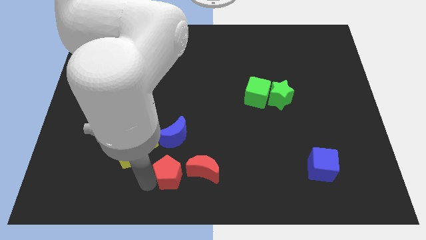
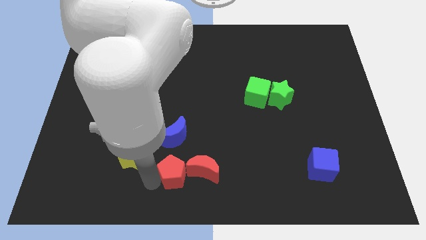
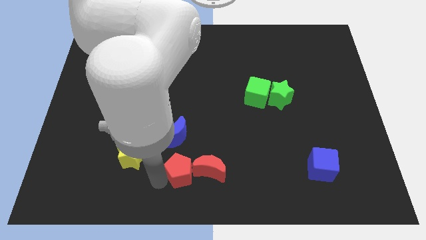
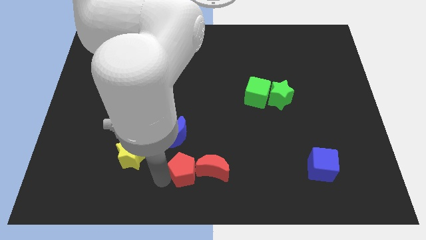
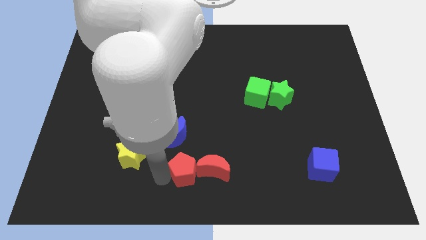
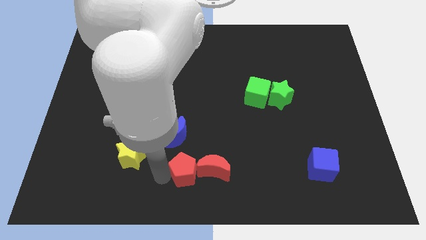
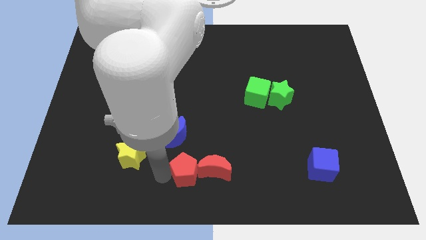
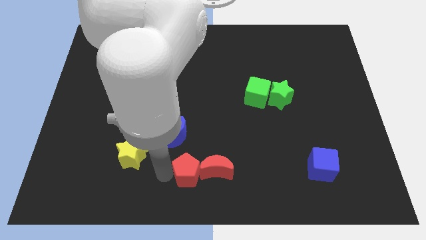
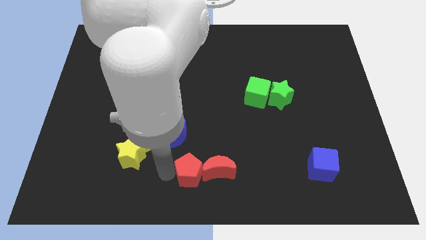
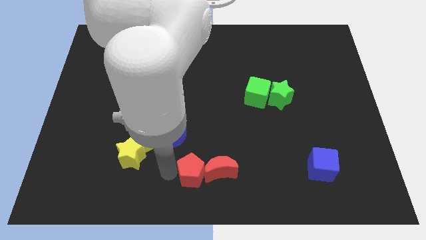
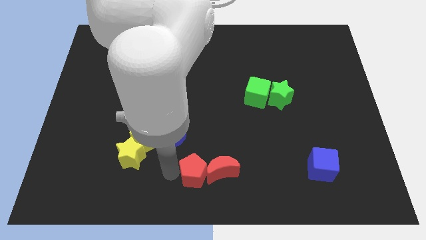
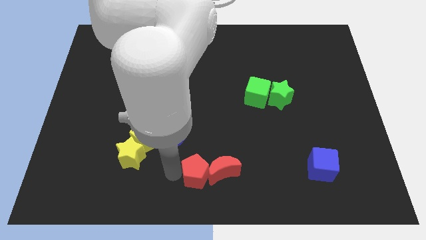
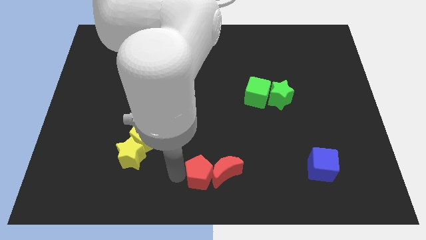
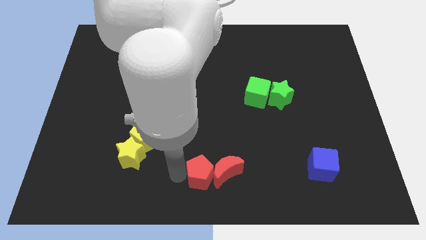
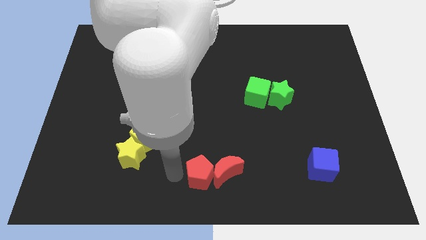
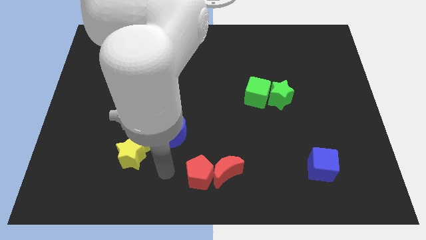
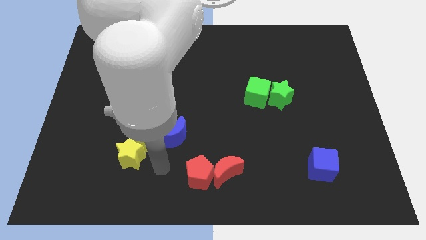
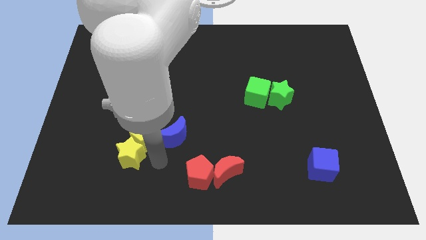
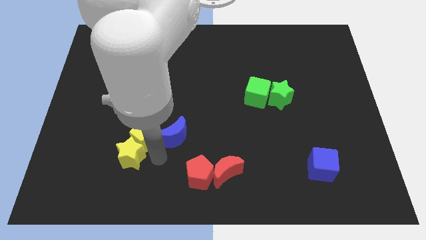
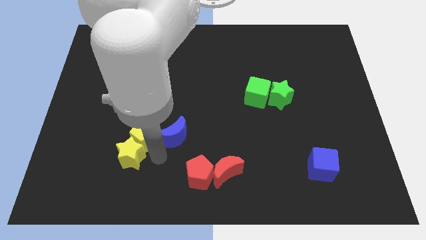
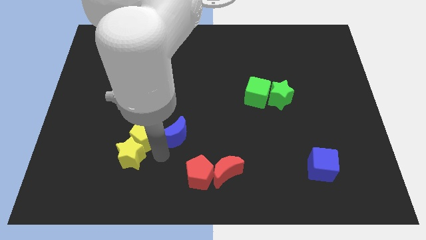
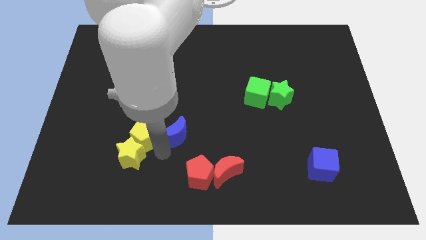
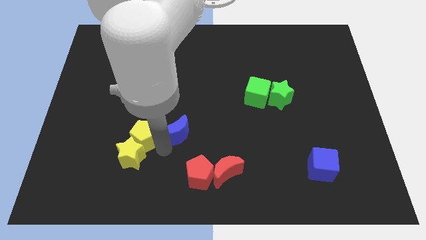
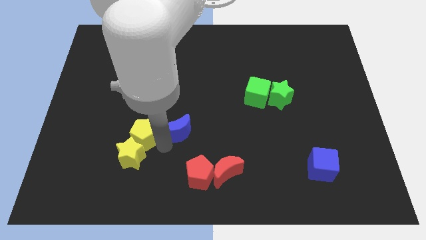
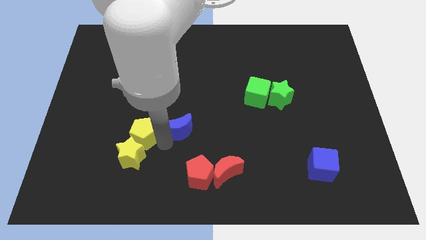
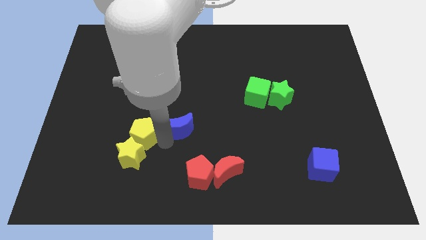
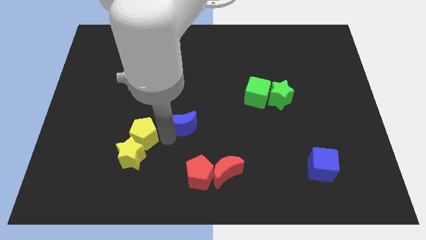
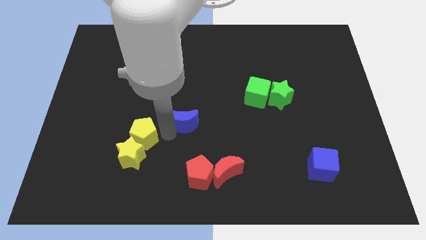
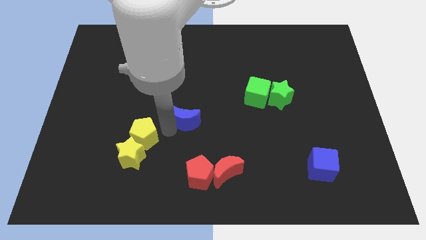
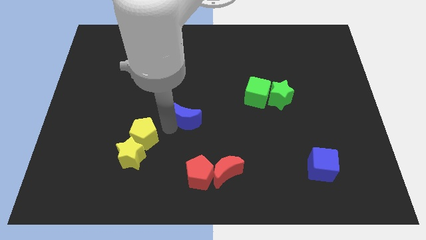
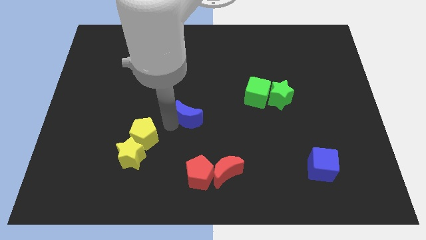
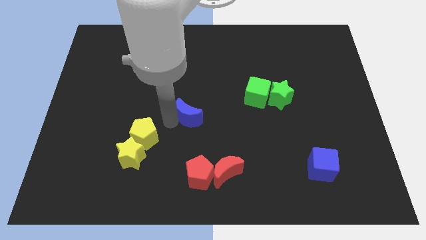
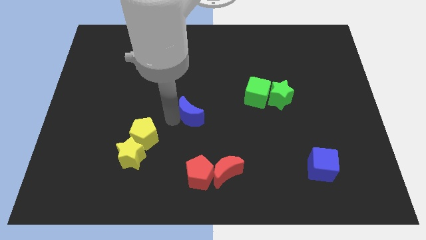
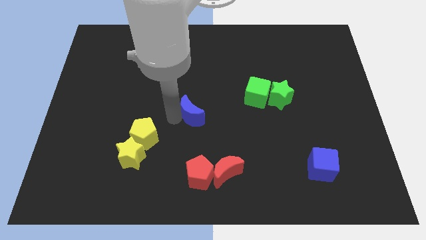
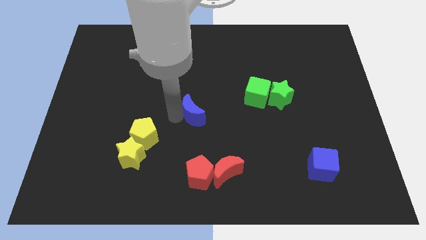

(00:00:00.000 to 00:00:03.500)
separate the blue moon and the yellow pentagon

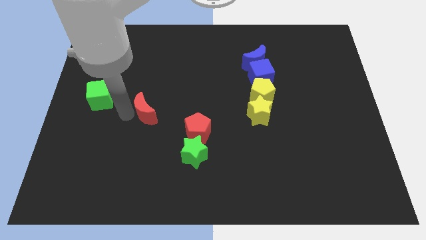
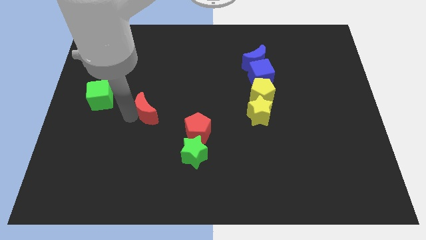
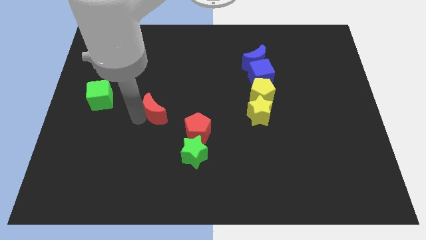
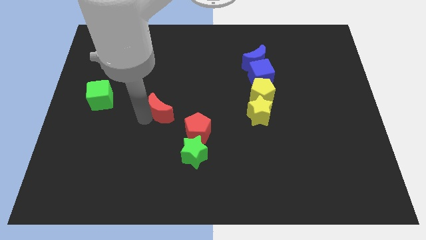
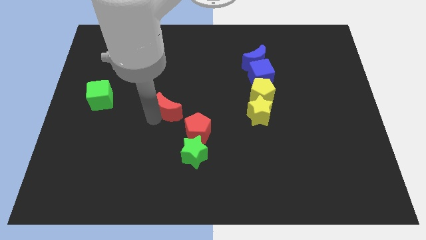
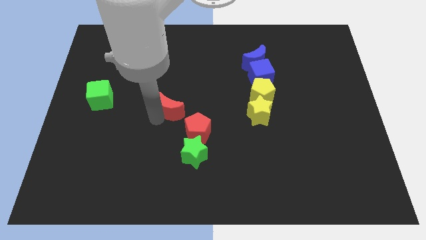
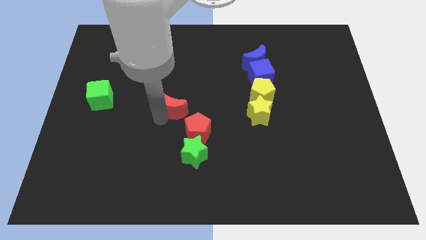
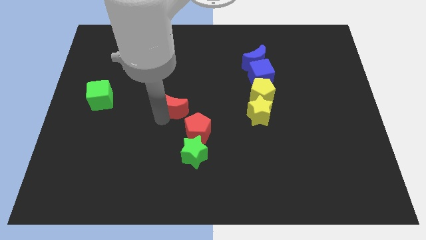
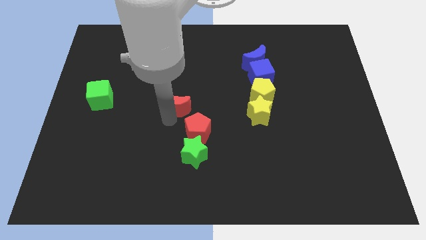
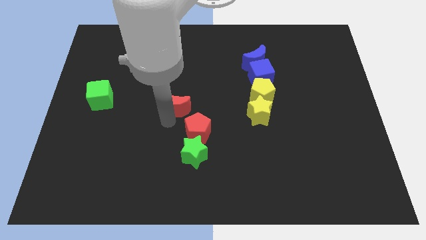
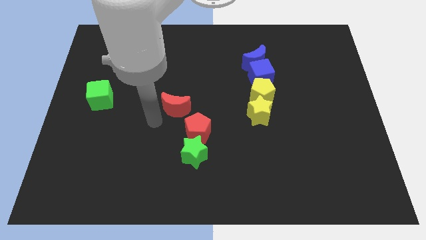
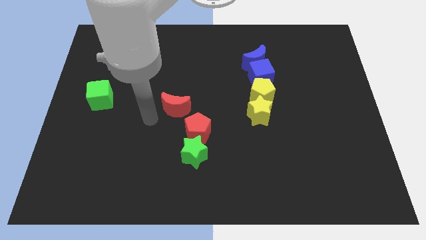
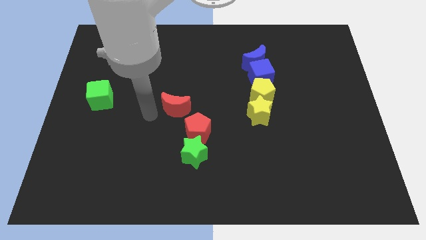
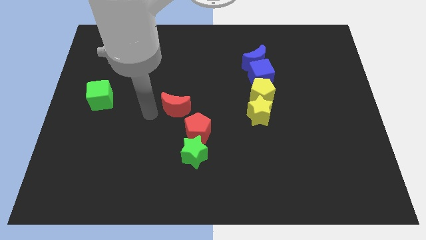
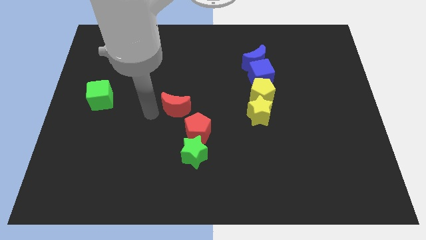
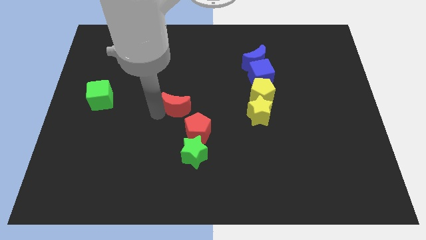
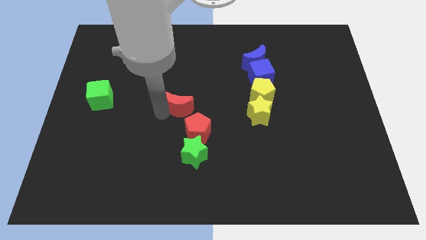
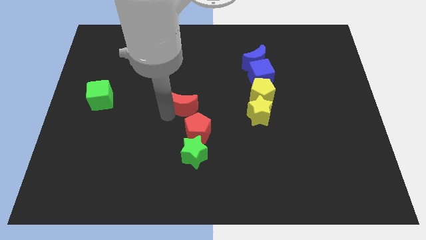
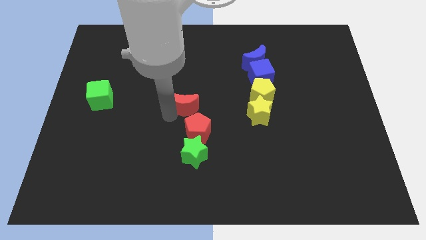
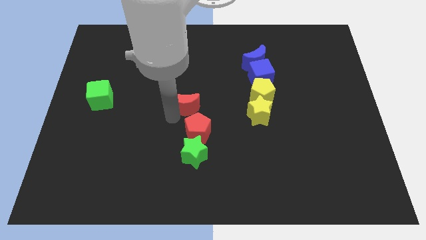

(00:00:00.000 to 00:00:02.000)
push the red crescent to the top of the red pentagon

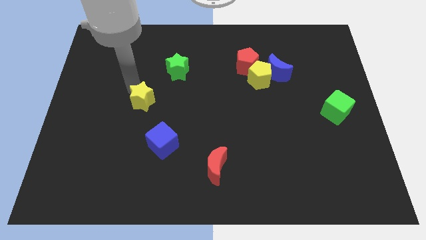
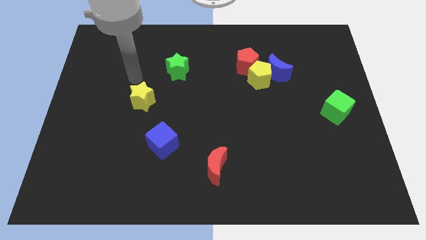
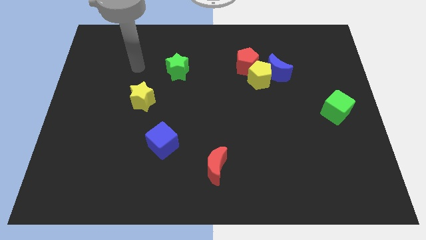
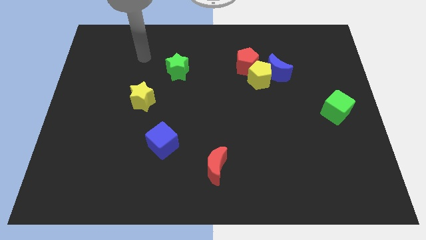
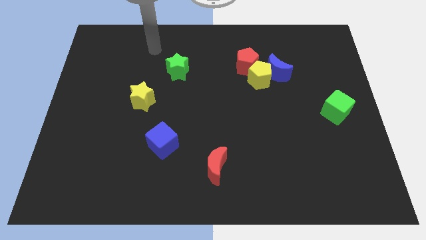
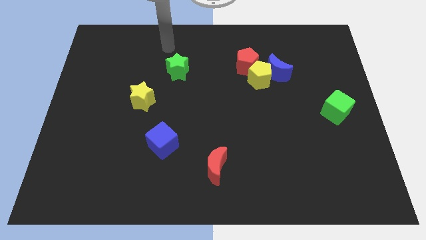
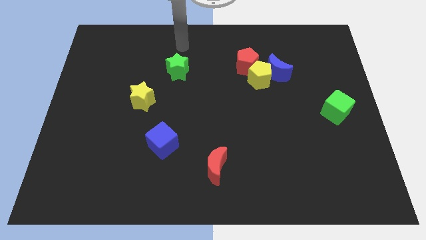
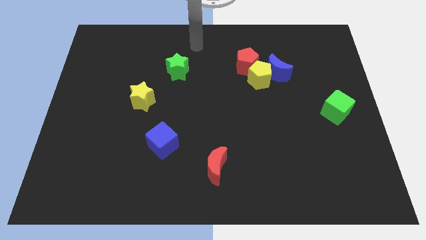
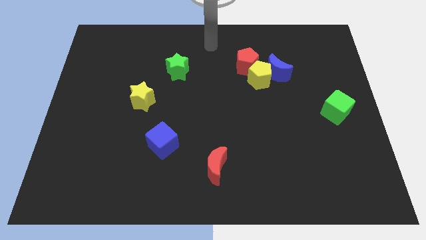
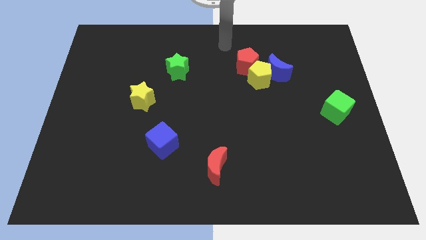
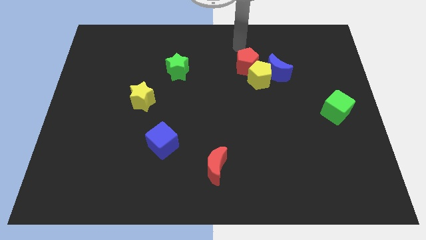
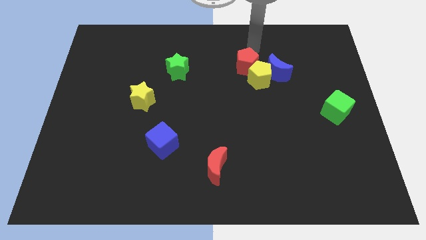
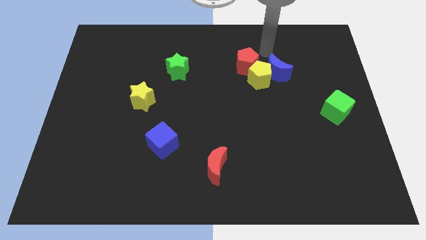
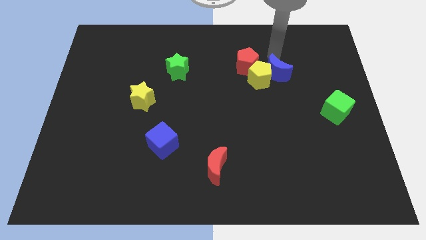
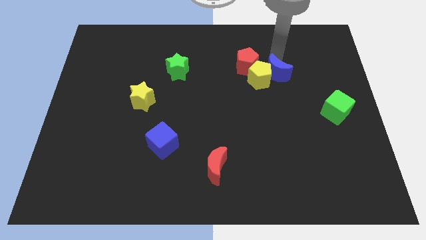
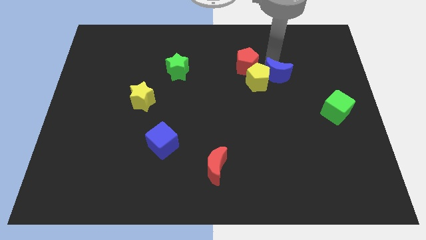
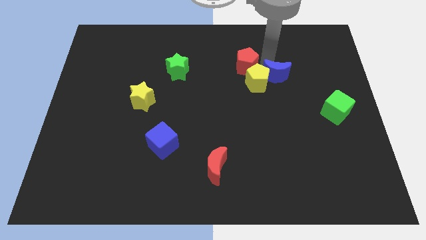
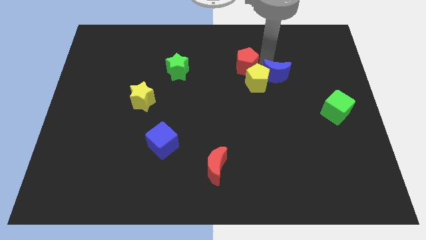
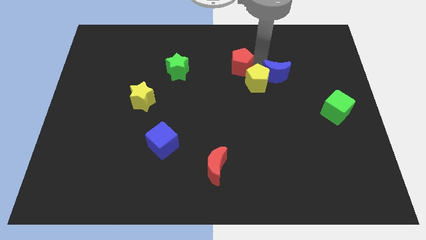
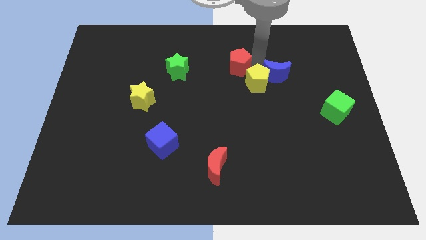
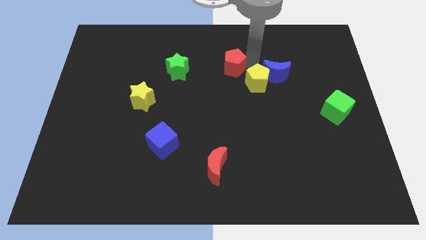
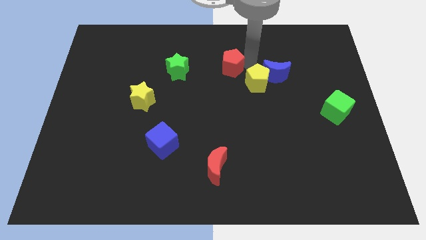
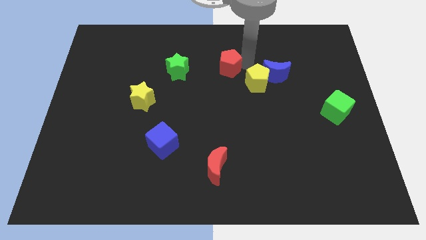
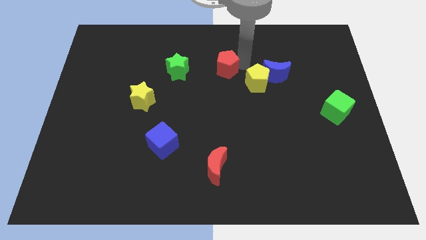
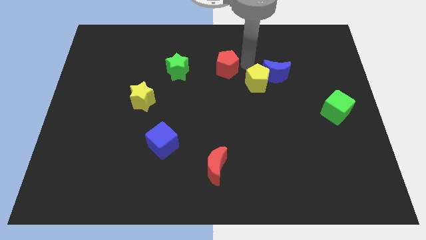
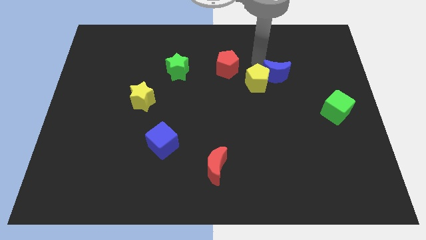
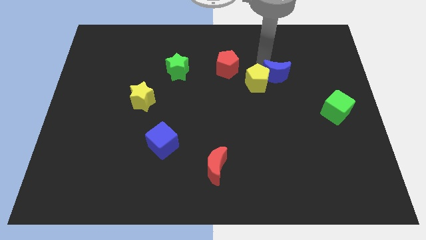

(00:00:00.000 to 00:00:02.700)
push the red pentagon slightly to the left

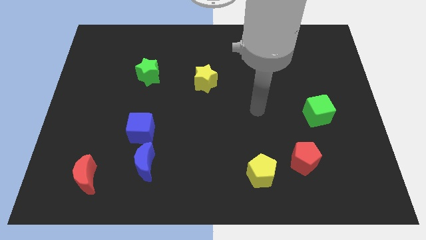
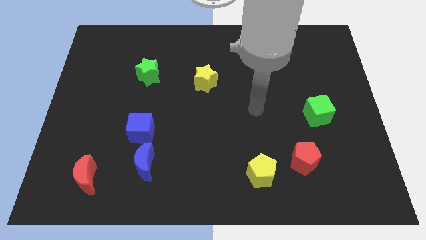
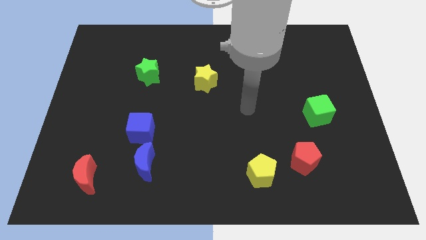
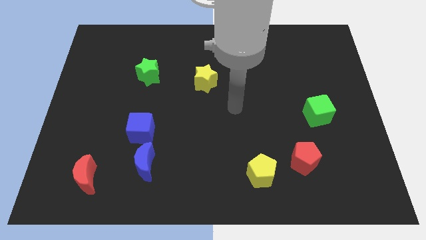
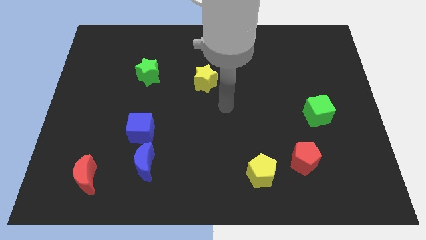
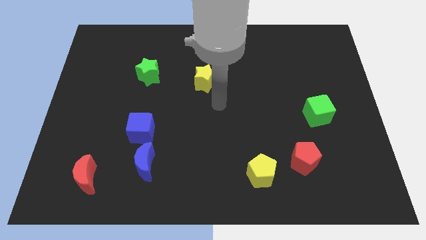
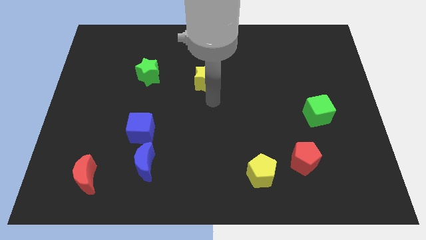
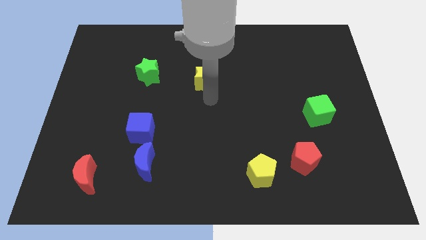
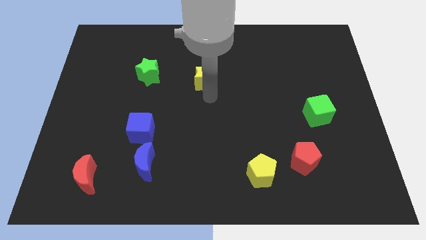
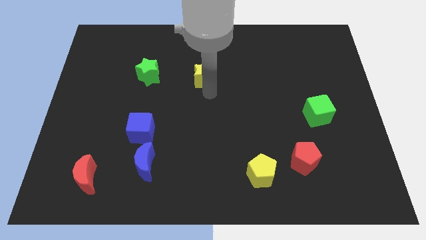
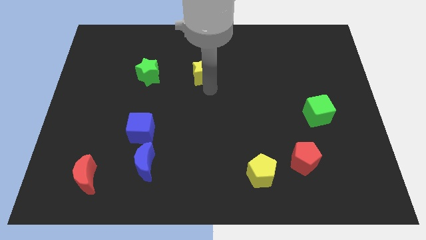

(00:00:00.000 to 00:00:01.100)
tap on the bottom side of yellow star
